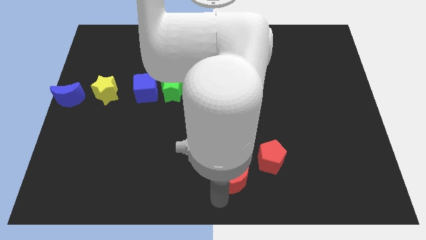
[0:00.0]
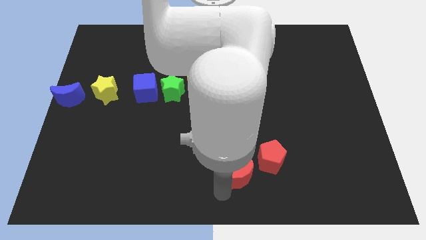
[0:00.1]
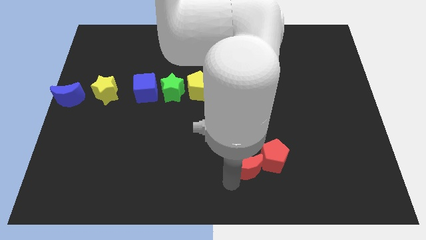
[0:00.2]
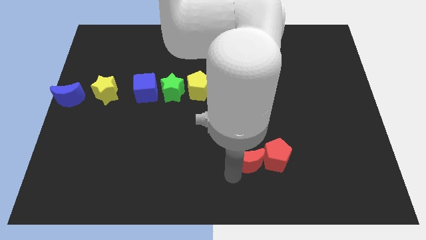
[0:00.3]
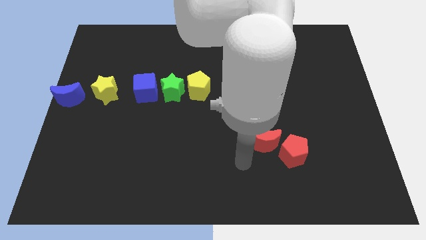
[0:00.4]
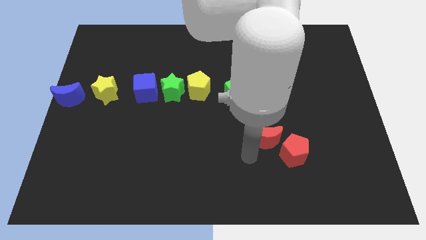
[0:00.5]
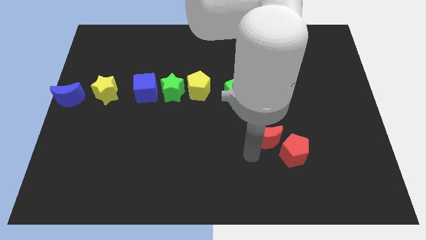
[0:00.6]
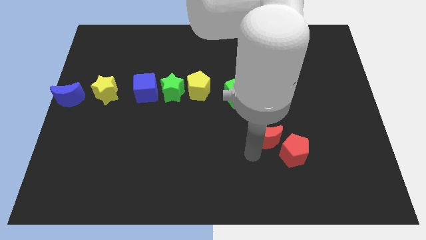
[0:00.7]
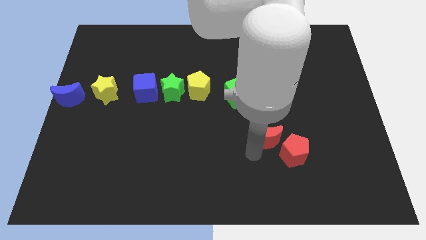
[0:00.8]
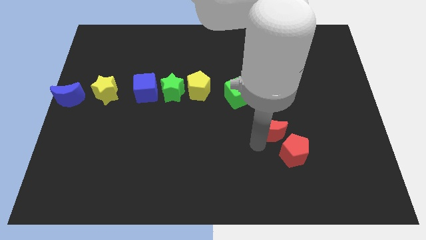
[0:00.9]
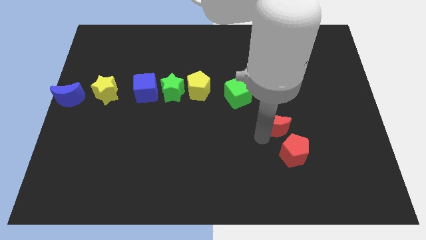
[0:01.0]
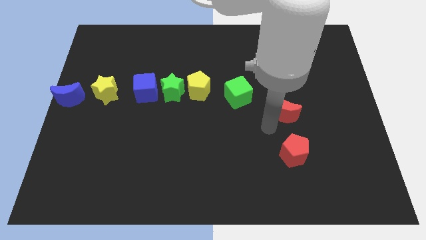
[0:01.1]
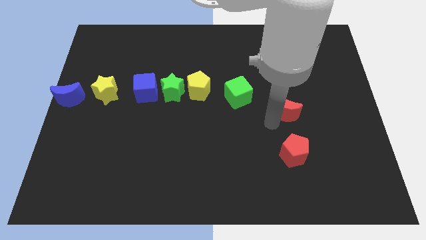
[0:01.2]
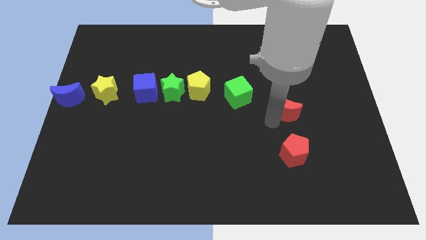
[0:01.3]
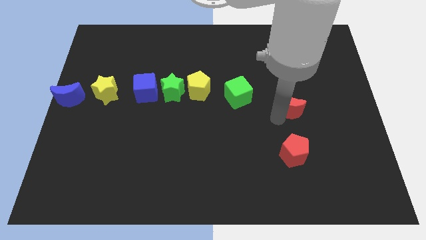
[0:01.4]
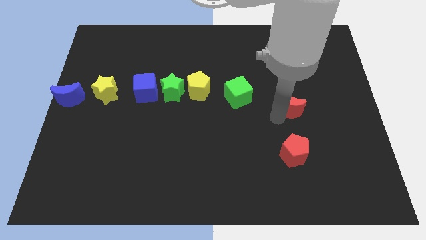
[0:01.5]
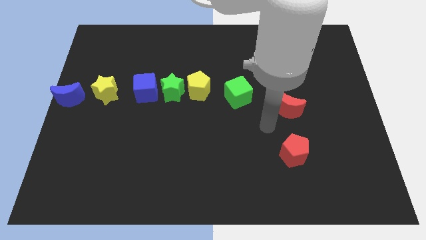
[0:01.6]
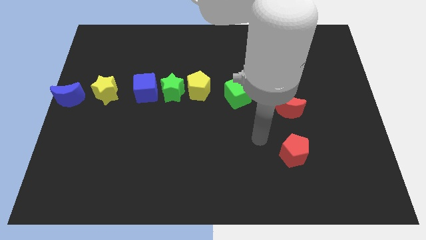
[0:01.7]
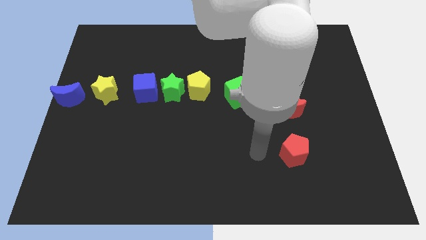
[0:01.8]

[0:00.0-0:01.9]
place red moon to the right side of green cube

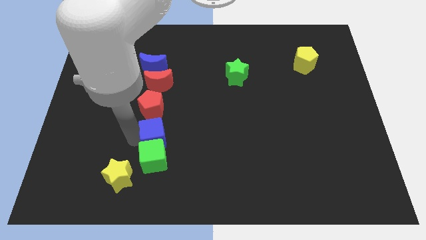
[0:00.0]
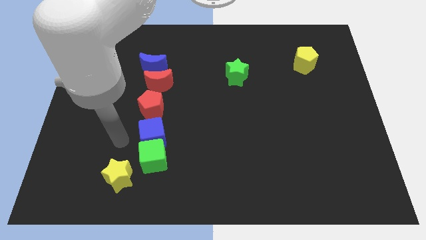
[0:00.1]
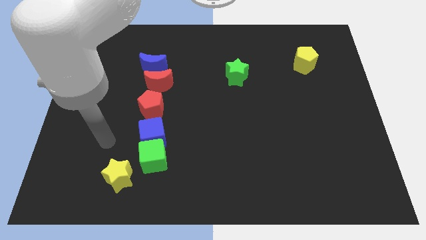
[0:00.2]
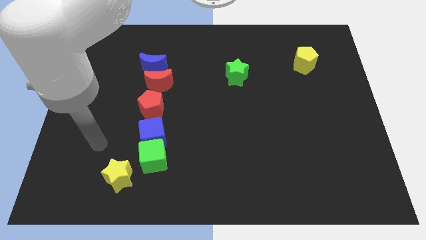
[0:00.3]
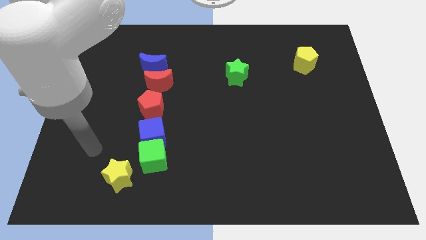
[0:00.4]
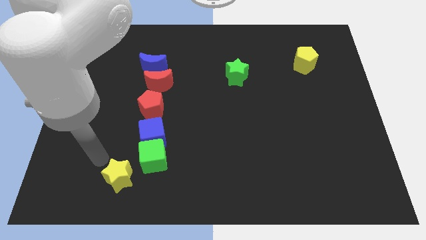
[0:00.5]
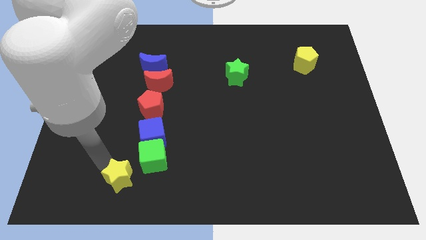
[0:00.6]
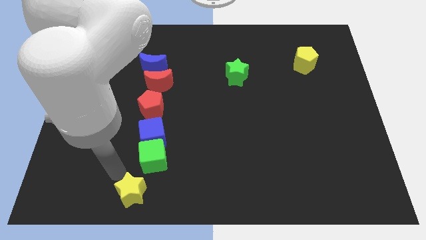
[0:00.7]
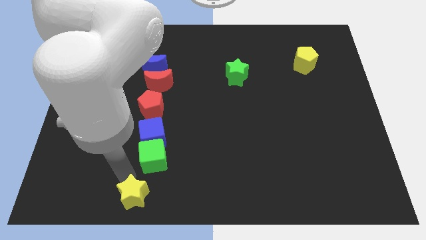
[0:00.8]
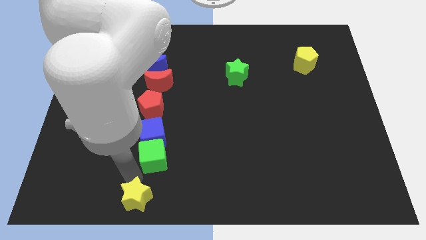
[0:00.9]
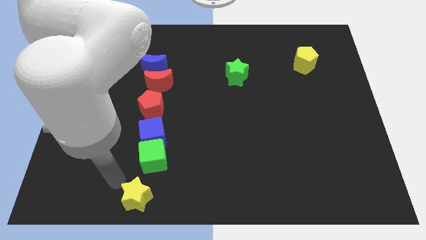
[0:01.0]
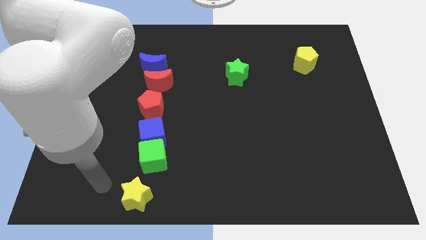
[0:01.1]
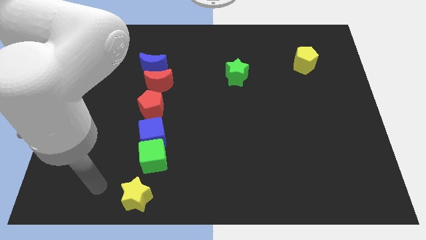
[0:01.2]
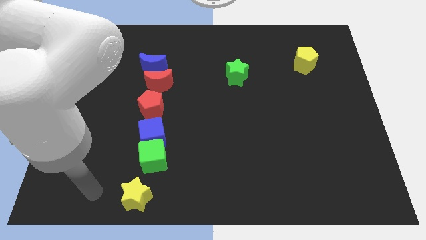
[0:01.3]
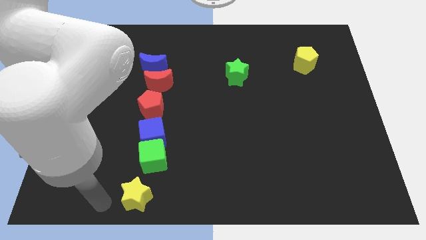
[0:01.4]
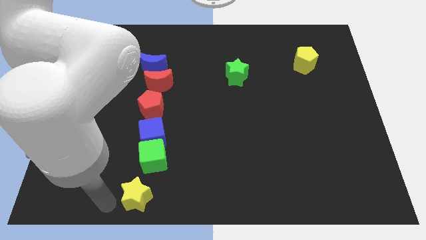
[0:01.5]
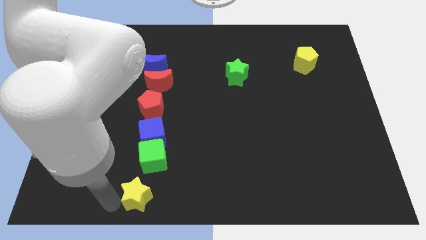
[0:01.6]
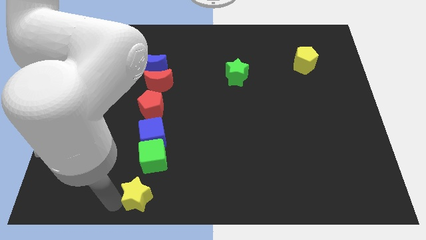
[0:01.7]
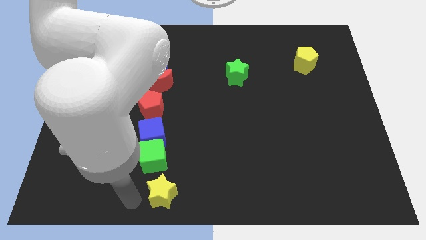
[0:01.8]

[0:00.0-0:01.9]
move the yellow star to the bottom of the green cube

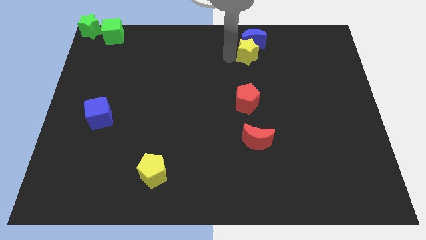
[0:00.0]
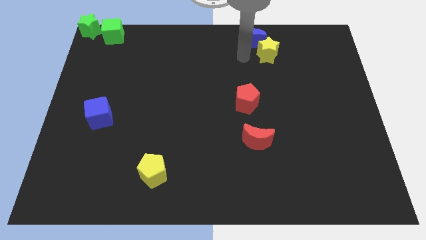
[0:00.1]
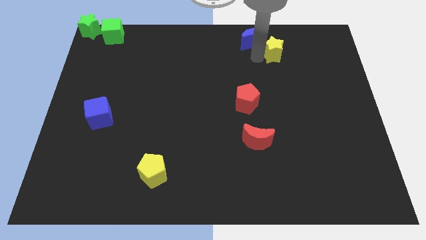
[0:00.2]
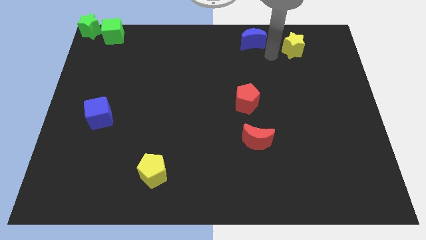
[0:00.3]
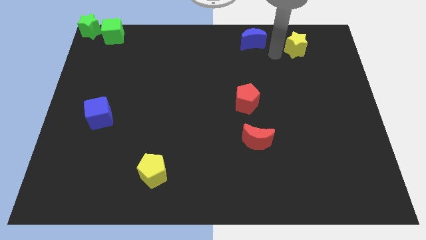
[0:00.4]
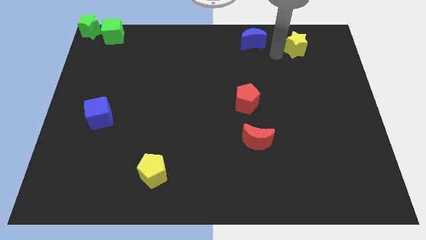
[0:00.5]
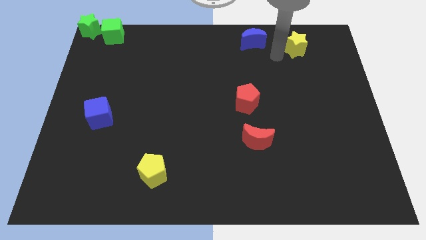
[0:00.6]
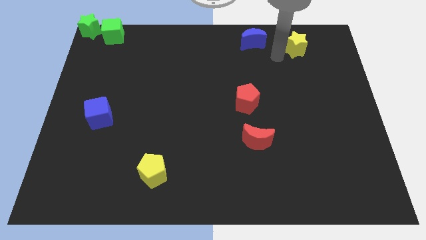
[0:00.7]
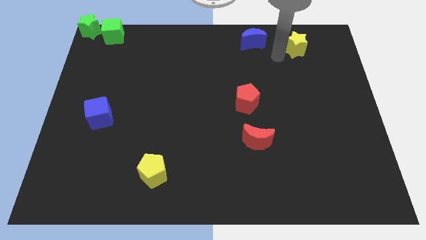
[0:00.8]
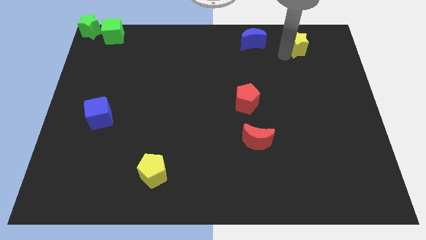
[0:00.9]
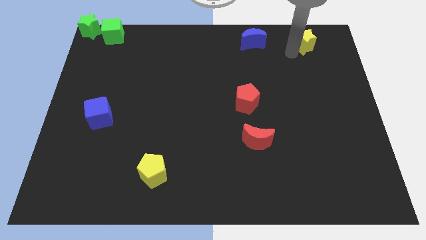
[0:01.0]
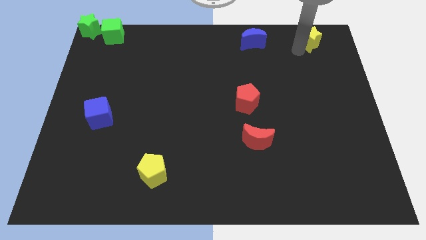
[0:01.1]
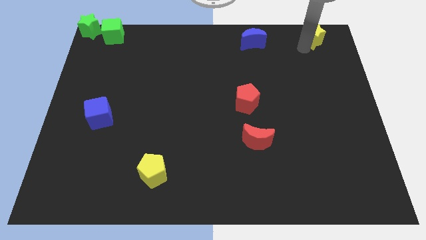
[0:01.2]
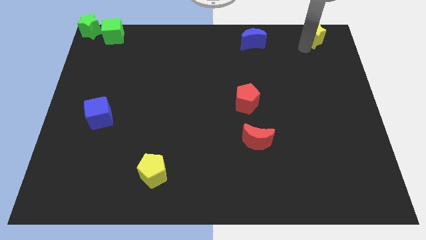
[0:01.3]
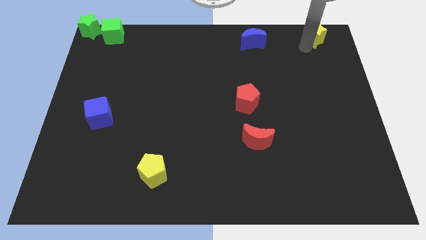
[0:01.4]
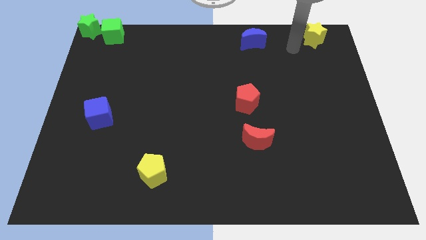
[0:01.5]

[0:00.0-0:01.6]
put the yellow star parallel right to the blue moon

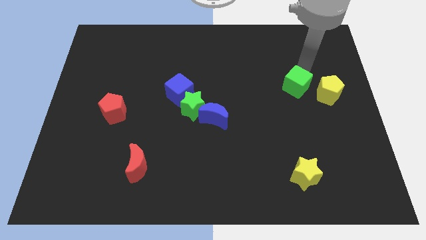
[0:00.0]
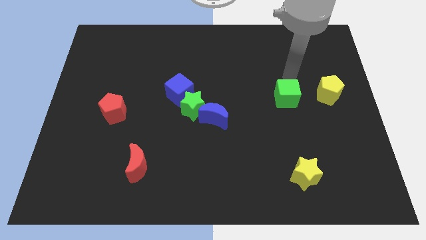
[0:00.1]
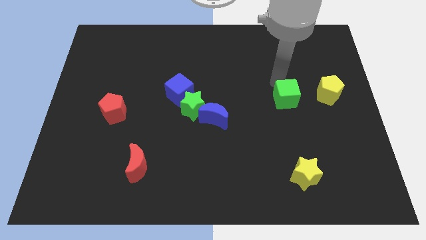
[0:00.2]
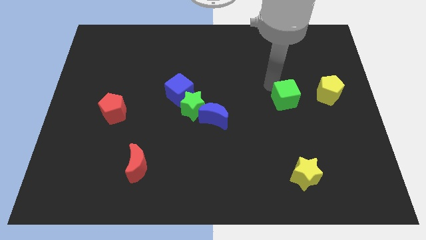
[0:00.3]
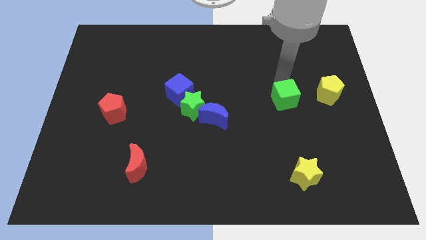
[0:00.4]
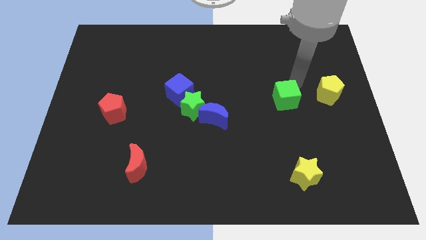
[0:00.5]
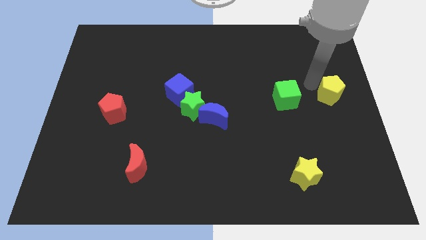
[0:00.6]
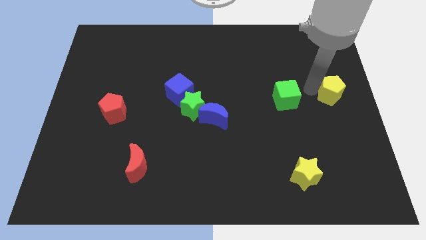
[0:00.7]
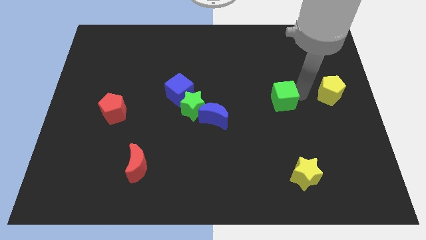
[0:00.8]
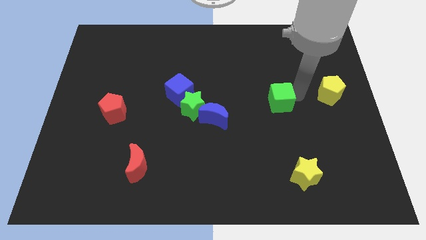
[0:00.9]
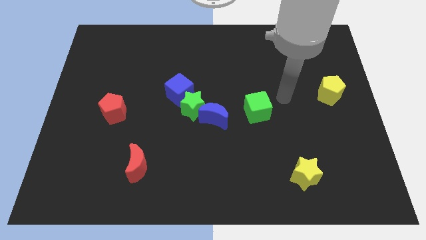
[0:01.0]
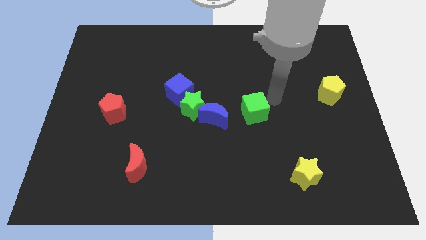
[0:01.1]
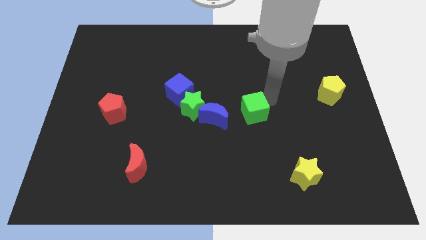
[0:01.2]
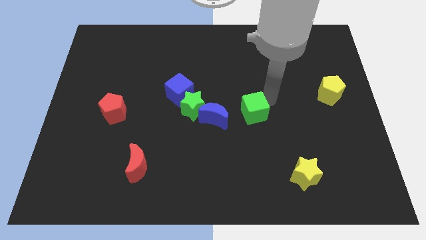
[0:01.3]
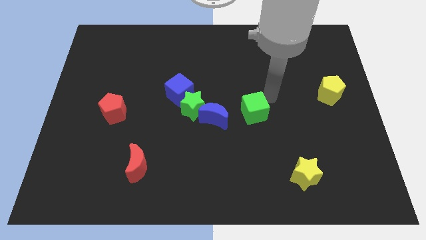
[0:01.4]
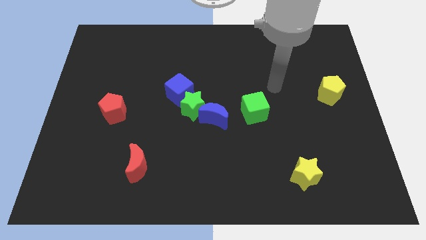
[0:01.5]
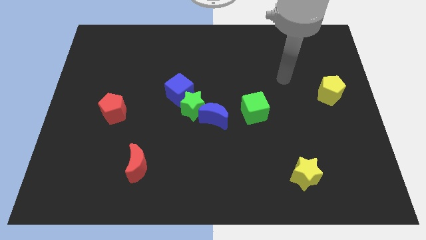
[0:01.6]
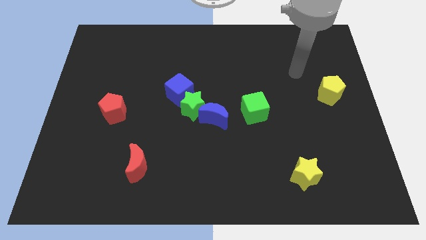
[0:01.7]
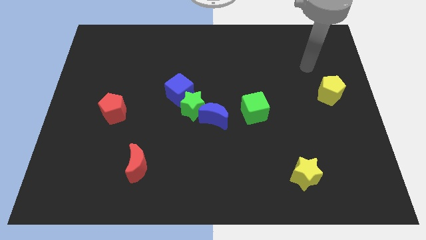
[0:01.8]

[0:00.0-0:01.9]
push the green cube diagonally bottom left to the yellow pentagon

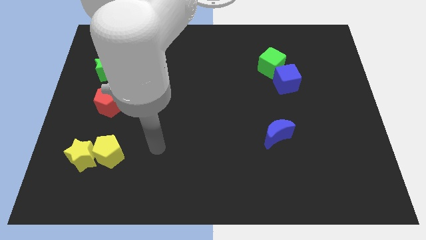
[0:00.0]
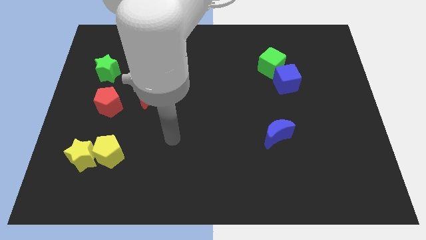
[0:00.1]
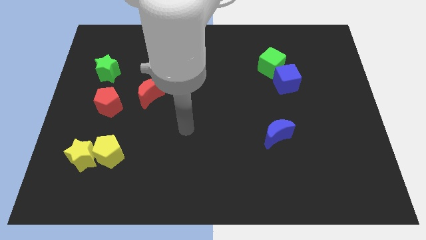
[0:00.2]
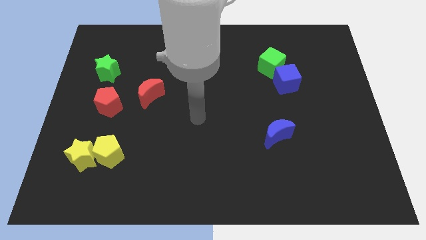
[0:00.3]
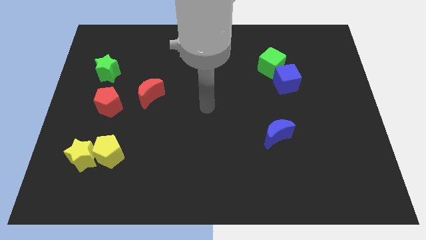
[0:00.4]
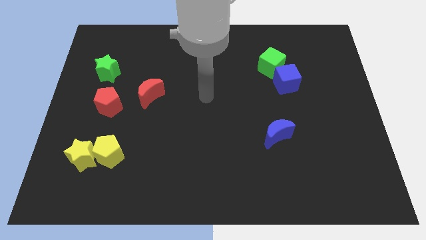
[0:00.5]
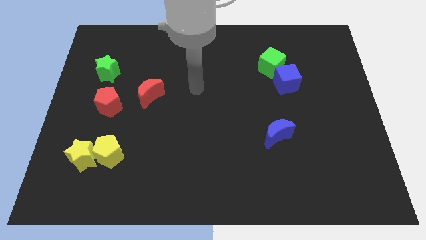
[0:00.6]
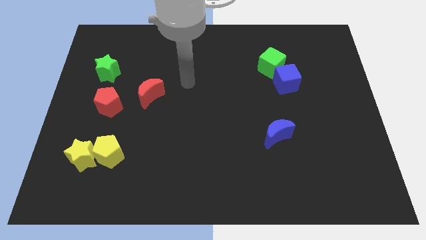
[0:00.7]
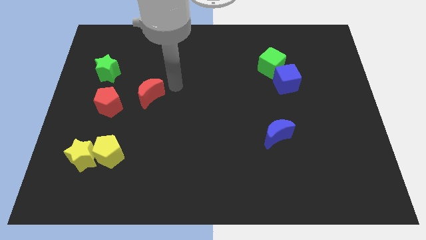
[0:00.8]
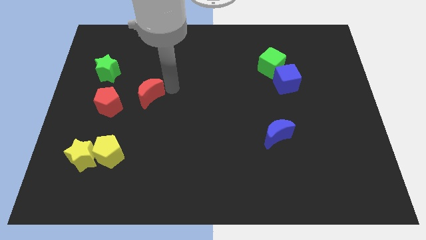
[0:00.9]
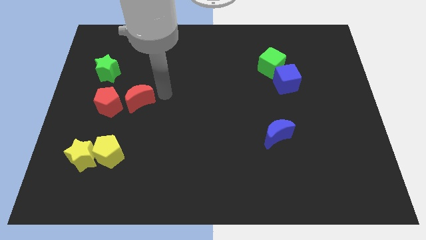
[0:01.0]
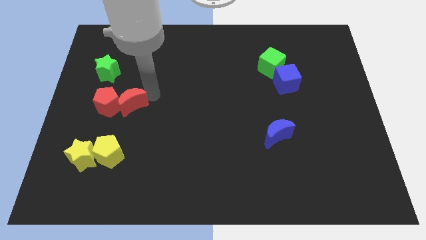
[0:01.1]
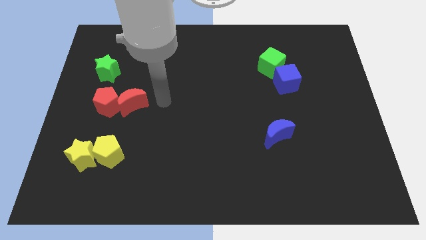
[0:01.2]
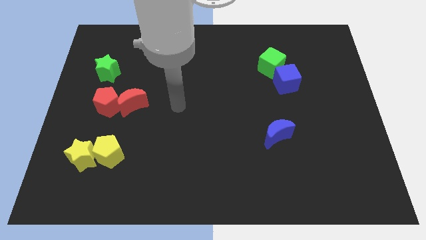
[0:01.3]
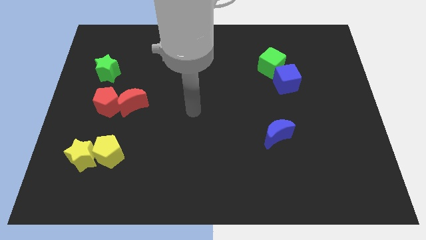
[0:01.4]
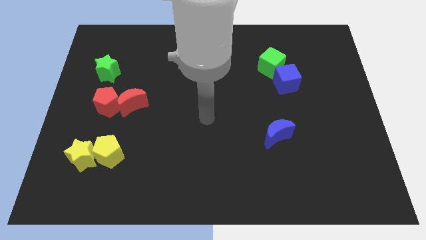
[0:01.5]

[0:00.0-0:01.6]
push the red moon into the red pentagon

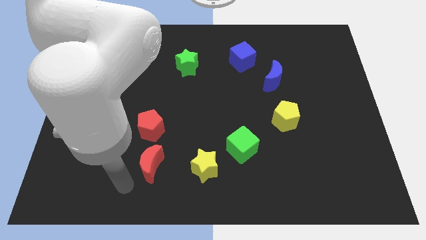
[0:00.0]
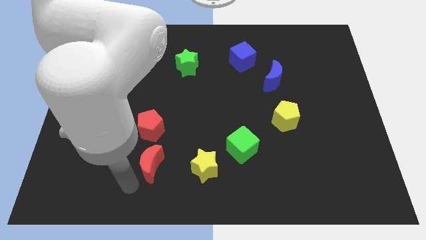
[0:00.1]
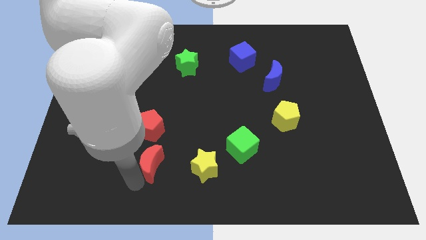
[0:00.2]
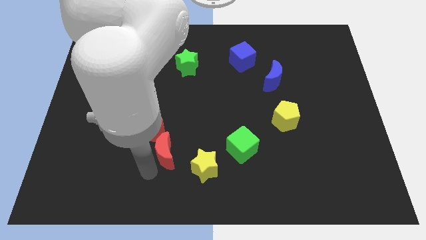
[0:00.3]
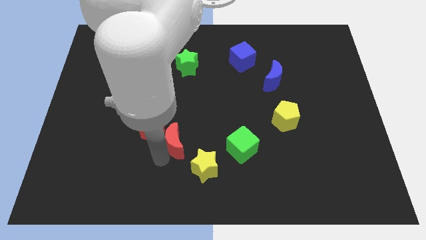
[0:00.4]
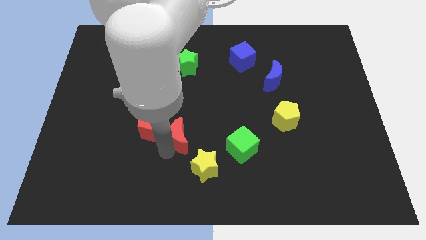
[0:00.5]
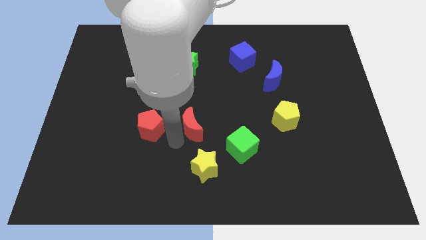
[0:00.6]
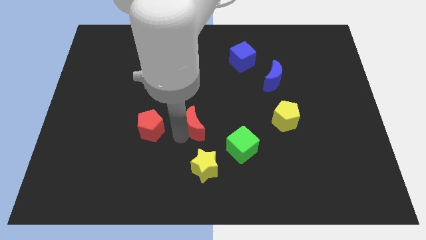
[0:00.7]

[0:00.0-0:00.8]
move the red crescent above the yellow star
